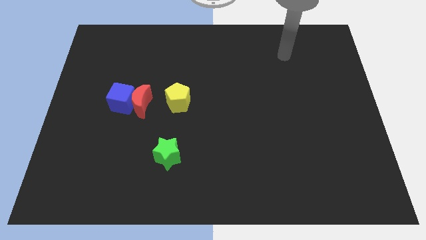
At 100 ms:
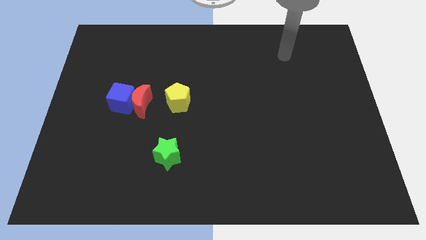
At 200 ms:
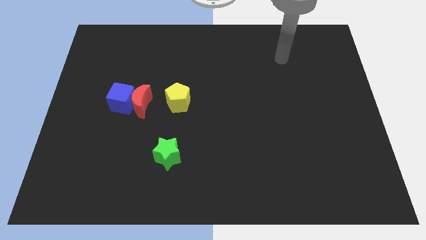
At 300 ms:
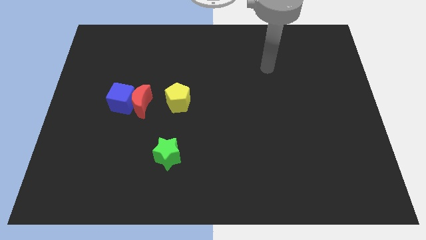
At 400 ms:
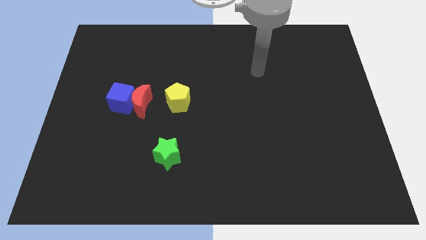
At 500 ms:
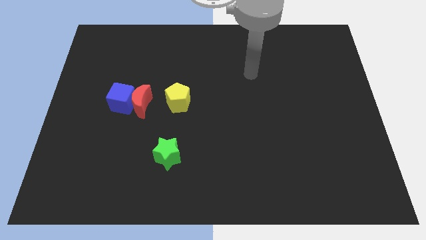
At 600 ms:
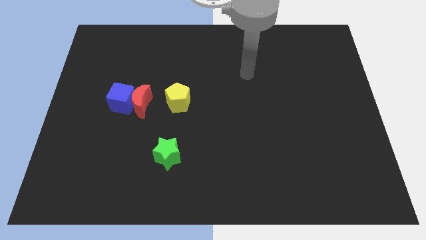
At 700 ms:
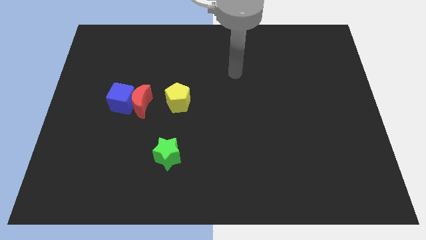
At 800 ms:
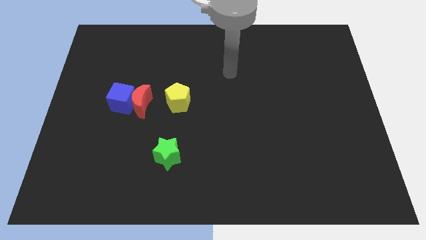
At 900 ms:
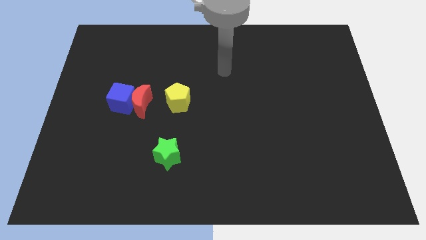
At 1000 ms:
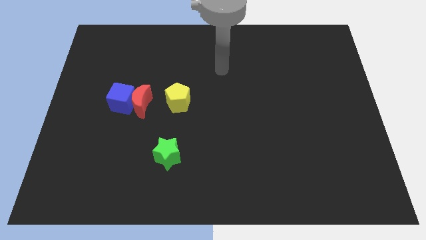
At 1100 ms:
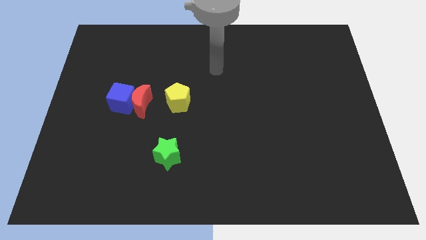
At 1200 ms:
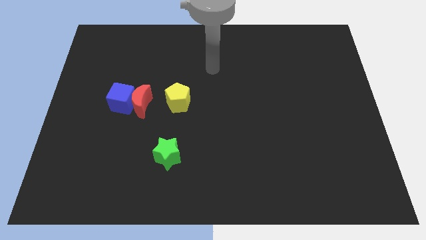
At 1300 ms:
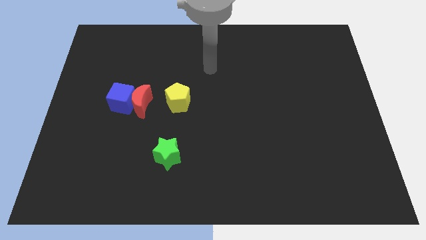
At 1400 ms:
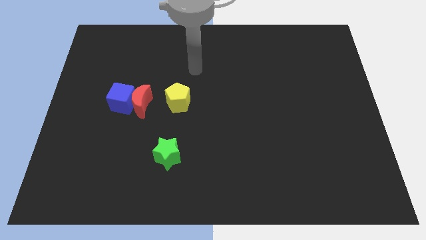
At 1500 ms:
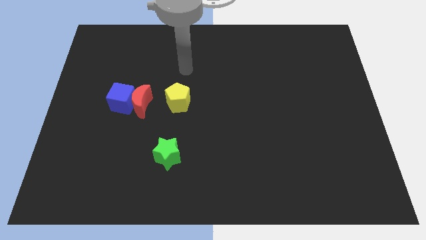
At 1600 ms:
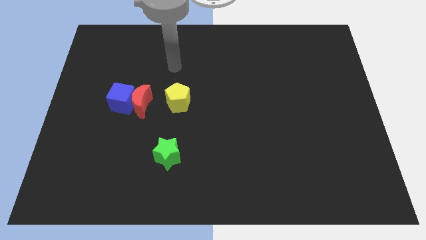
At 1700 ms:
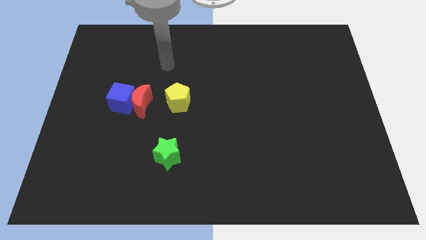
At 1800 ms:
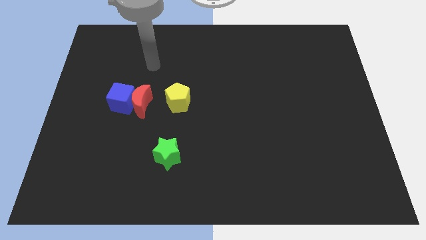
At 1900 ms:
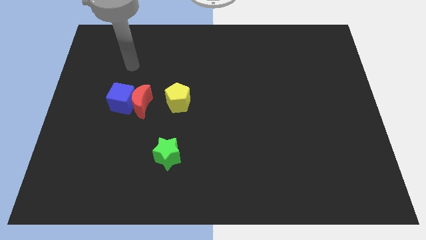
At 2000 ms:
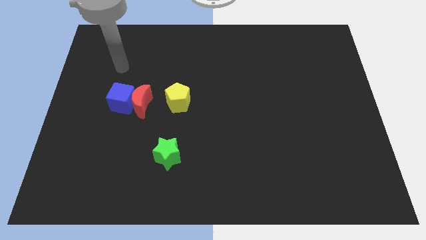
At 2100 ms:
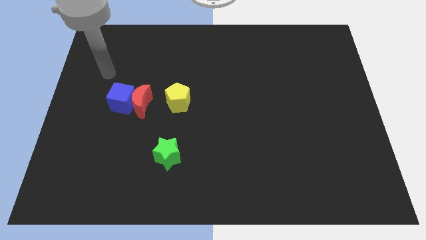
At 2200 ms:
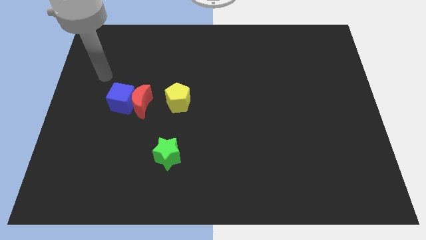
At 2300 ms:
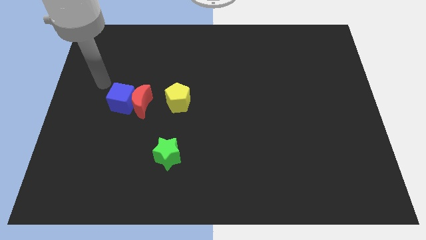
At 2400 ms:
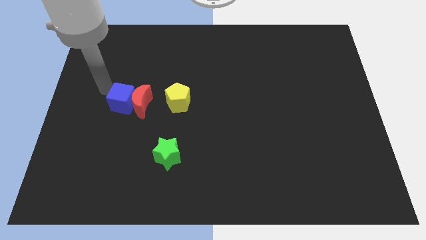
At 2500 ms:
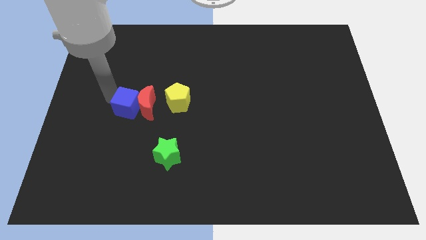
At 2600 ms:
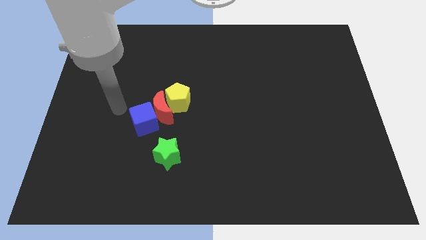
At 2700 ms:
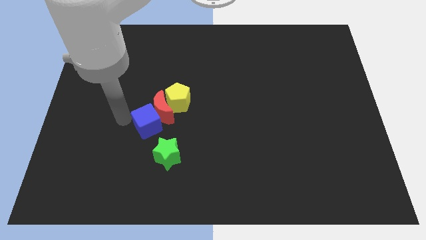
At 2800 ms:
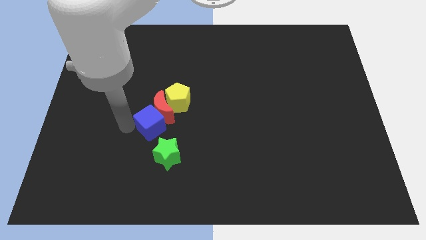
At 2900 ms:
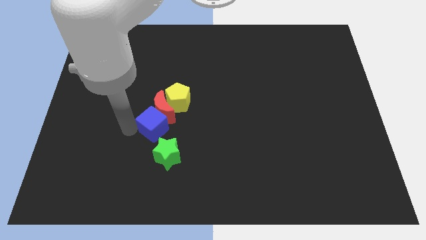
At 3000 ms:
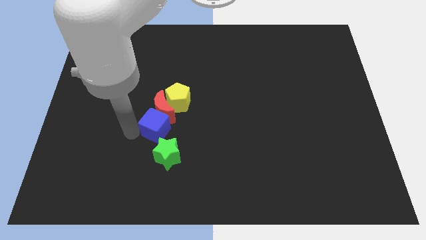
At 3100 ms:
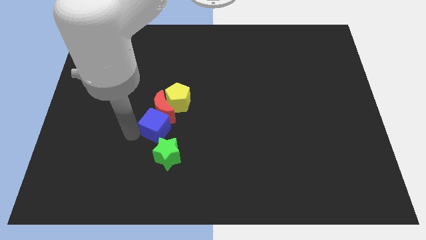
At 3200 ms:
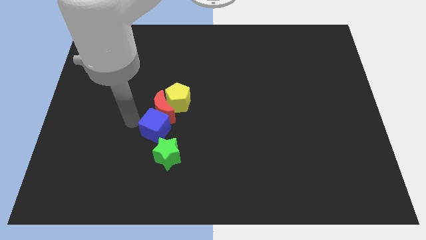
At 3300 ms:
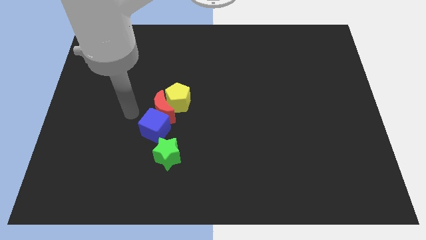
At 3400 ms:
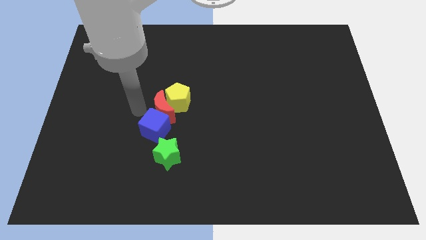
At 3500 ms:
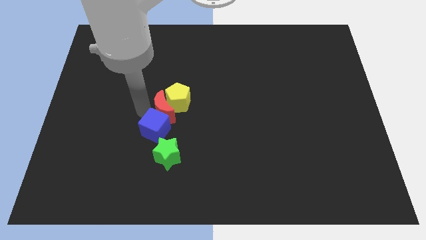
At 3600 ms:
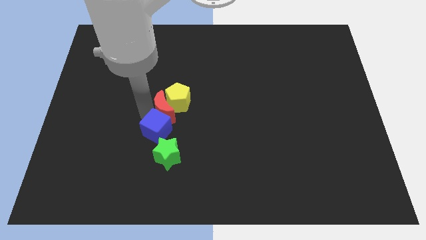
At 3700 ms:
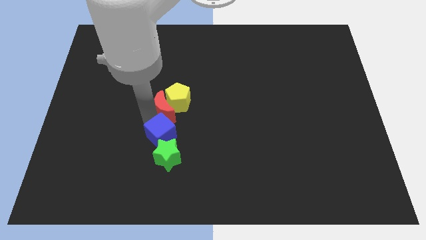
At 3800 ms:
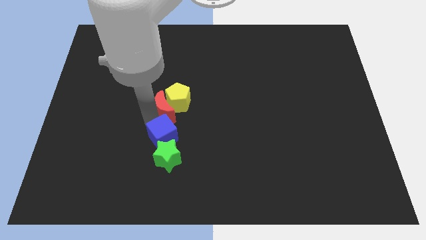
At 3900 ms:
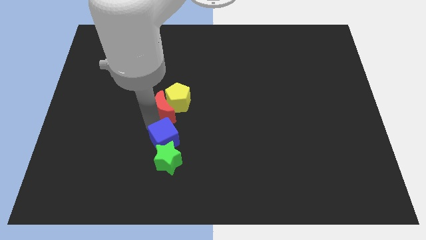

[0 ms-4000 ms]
push the blue cube next to the green block

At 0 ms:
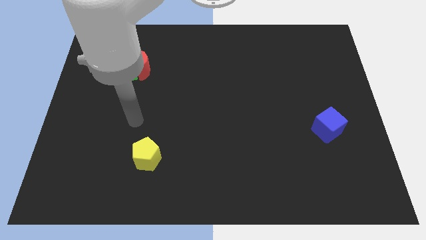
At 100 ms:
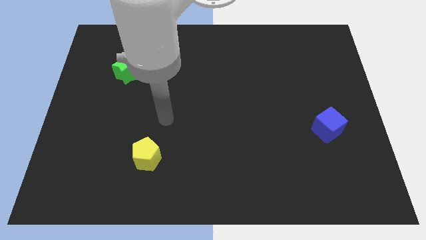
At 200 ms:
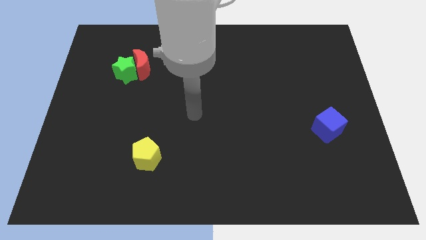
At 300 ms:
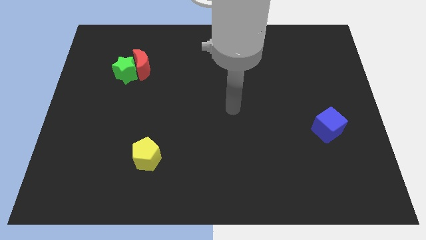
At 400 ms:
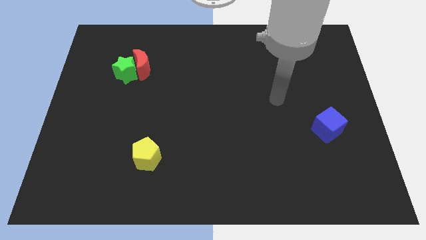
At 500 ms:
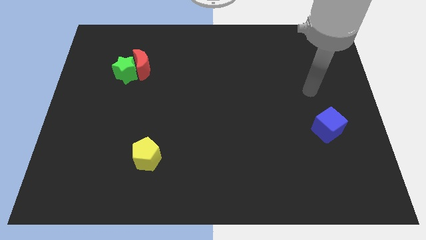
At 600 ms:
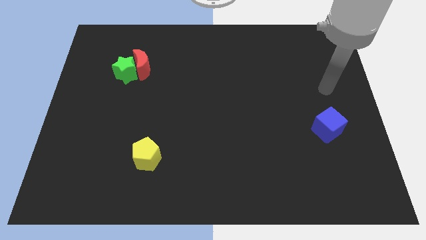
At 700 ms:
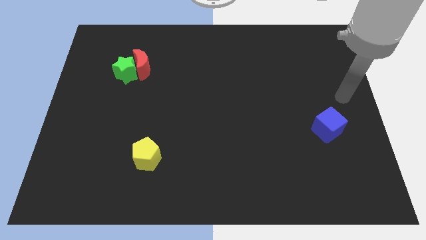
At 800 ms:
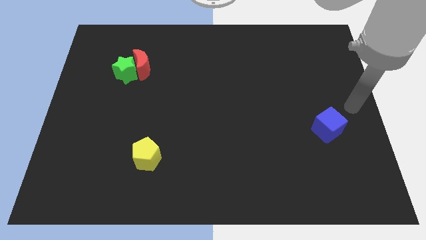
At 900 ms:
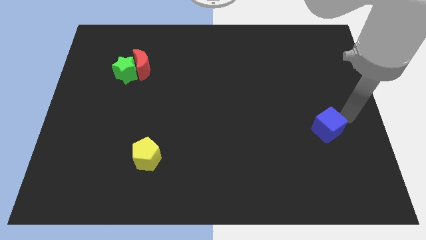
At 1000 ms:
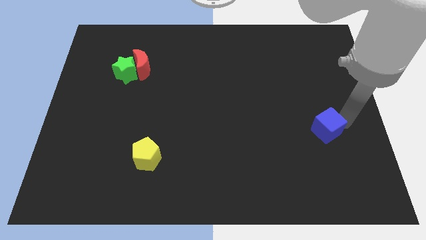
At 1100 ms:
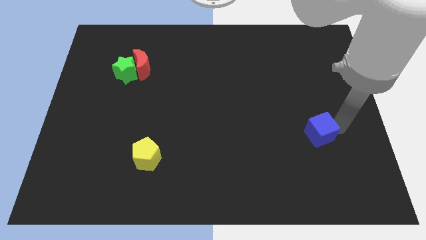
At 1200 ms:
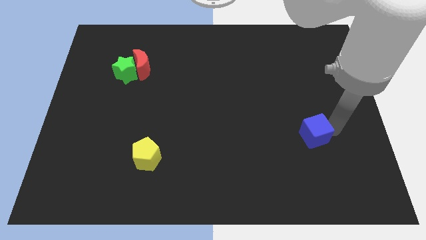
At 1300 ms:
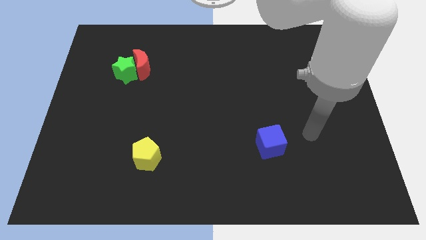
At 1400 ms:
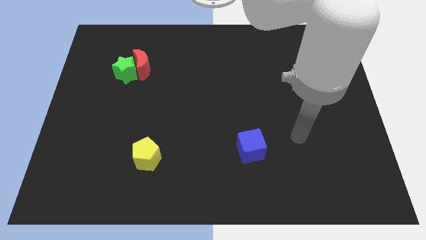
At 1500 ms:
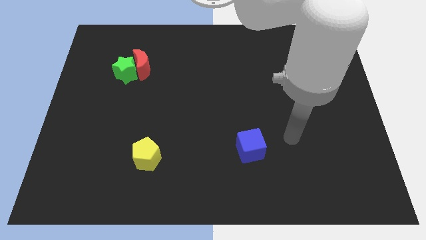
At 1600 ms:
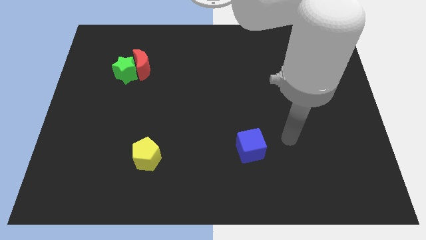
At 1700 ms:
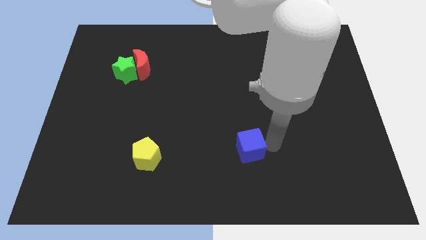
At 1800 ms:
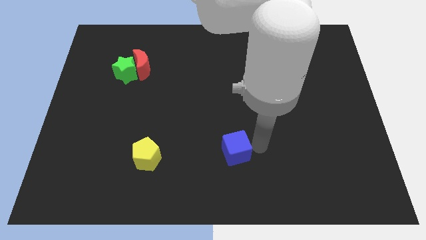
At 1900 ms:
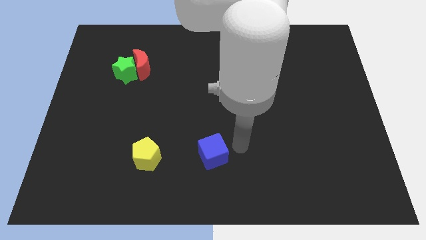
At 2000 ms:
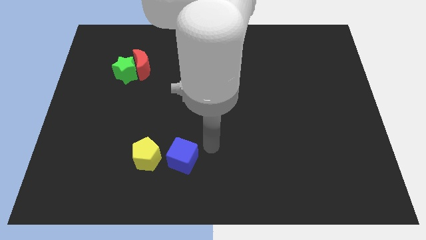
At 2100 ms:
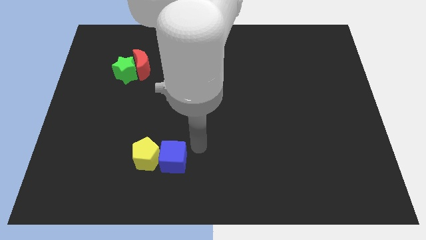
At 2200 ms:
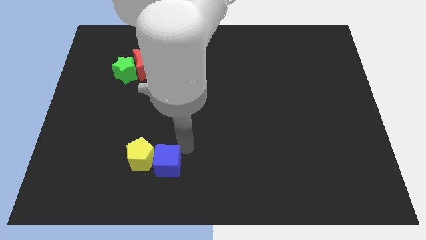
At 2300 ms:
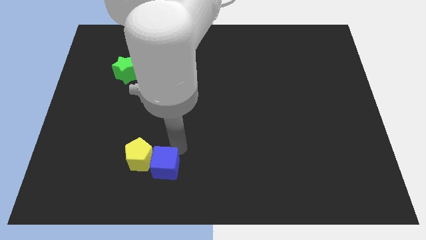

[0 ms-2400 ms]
slide the blue block next to the yellow pentagon

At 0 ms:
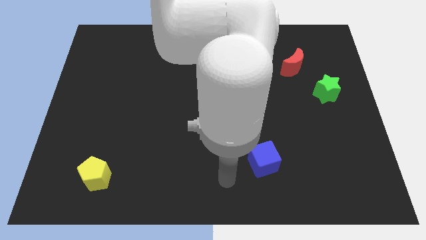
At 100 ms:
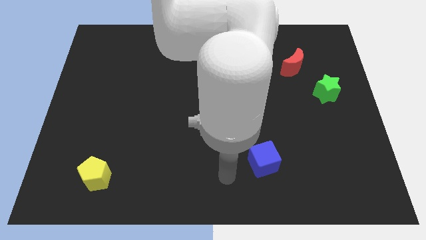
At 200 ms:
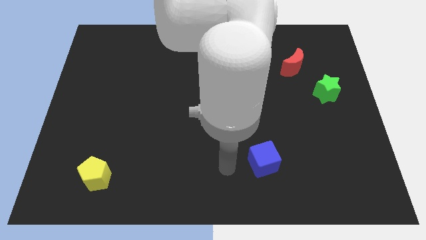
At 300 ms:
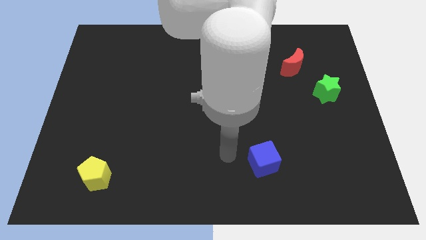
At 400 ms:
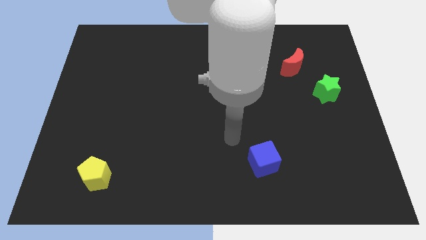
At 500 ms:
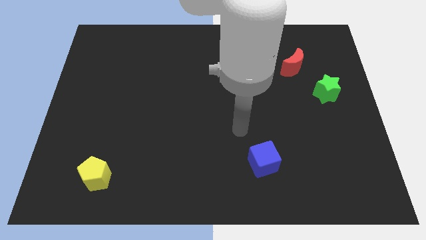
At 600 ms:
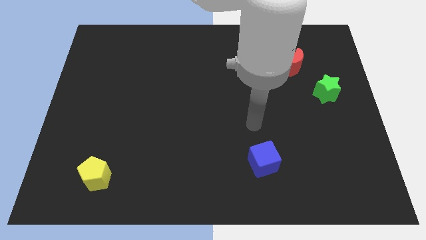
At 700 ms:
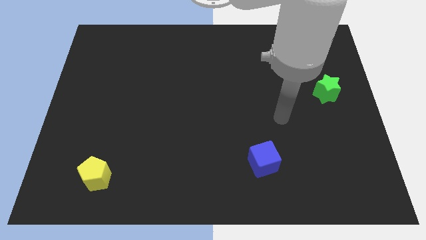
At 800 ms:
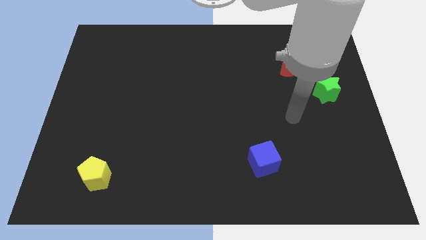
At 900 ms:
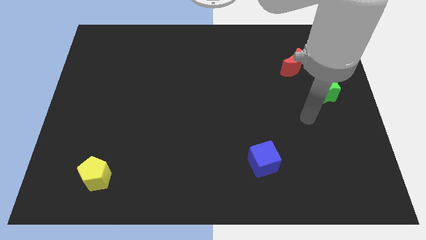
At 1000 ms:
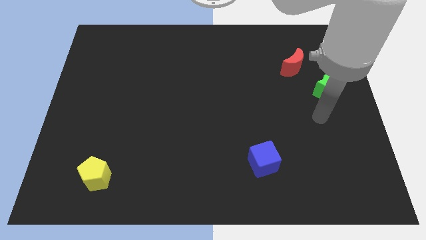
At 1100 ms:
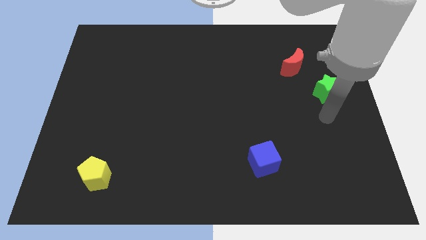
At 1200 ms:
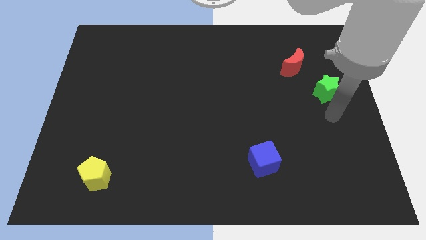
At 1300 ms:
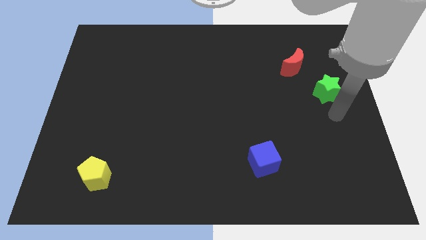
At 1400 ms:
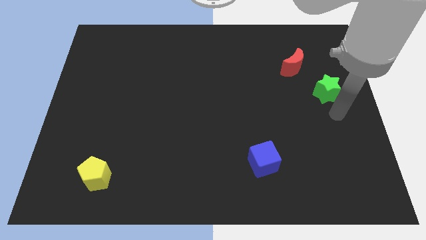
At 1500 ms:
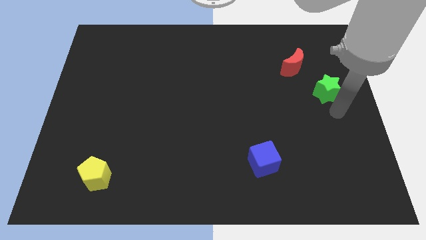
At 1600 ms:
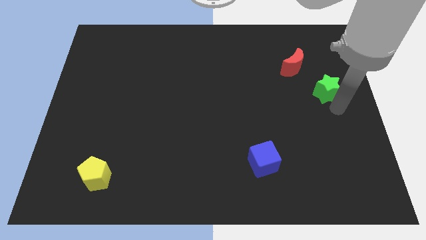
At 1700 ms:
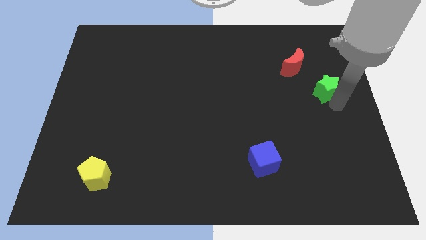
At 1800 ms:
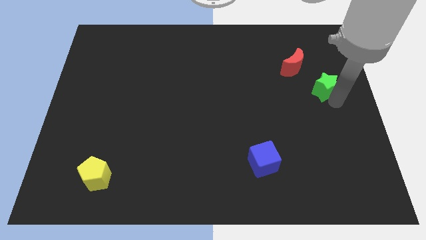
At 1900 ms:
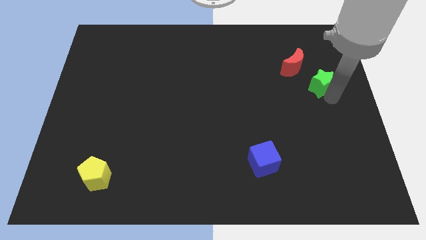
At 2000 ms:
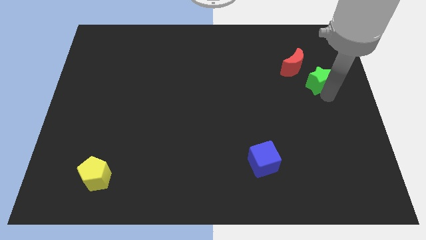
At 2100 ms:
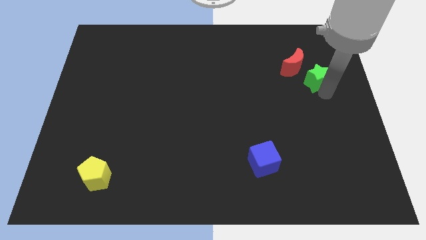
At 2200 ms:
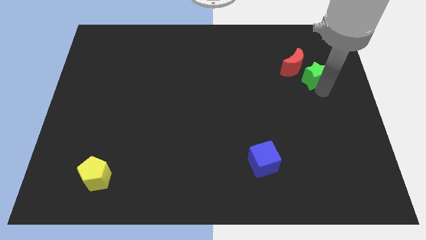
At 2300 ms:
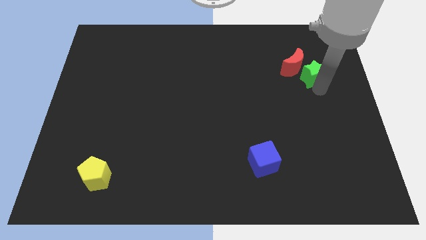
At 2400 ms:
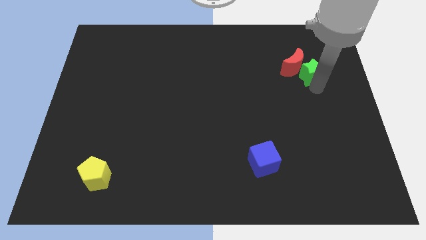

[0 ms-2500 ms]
move the star towards the moon
